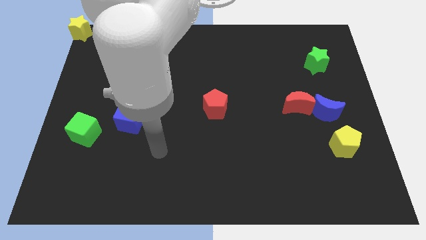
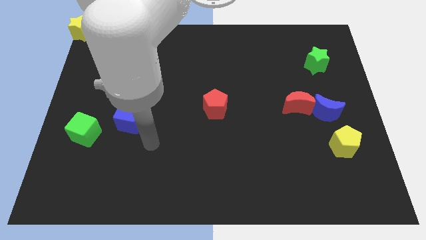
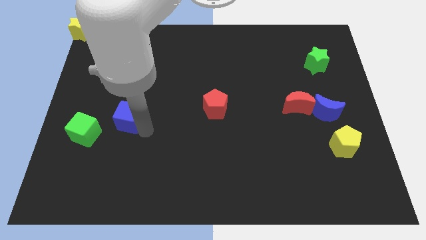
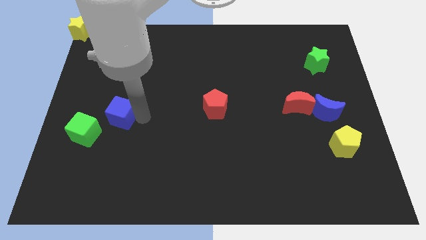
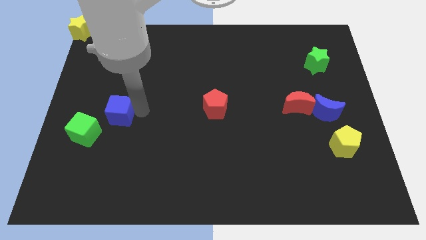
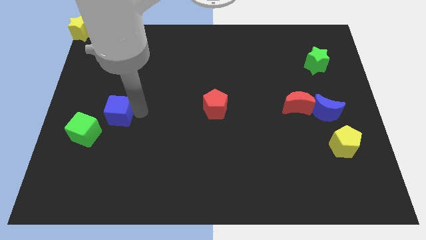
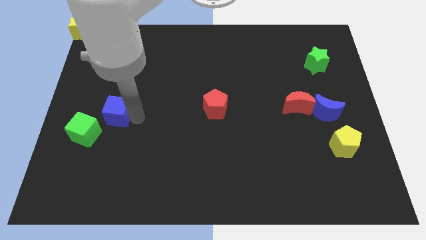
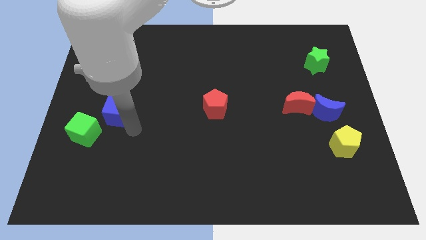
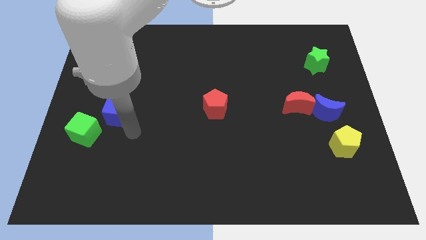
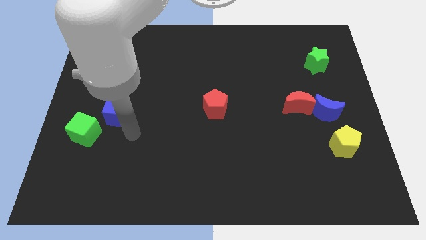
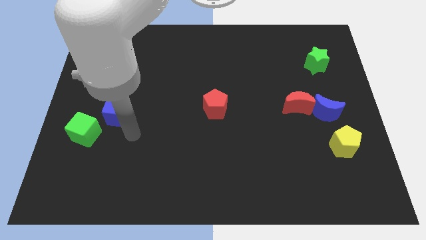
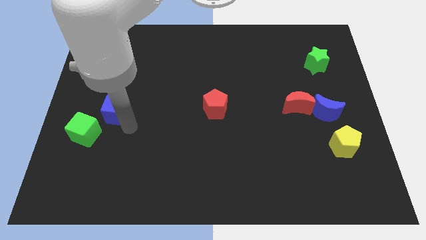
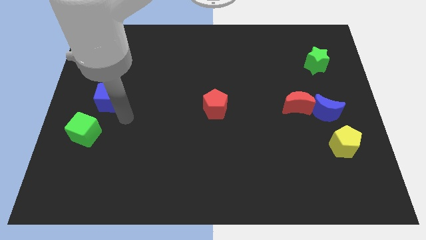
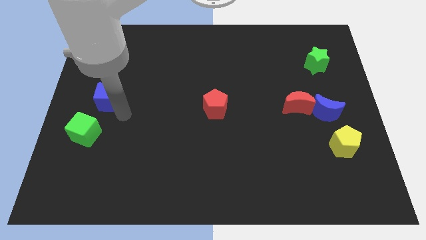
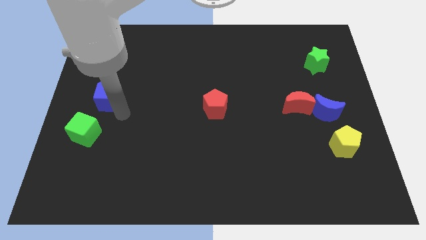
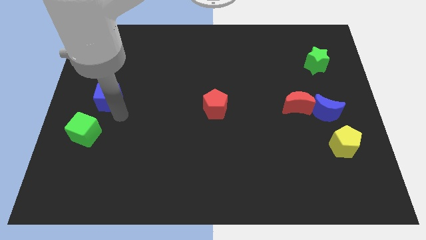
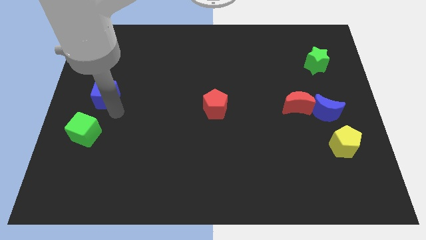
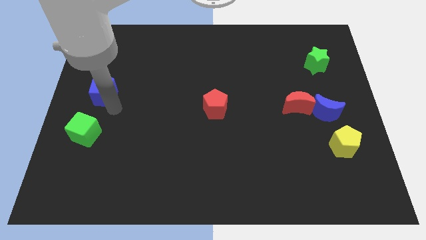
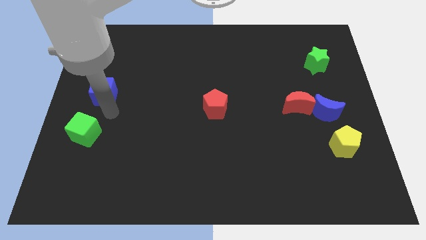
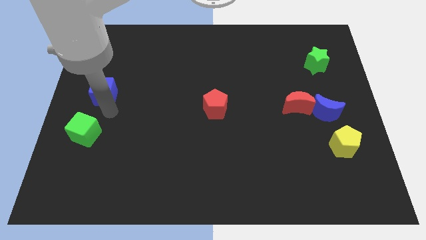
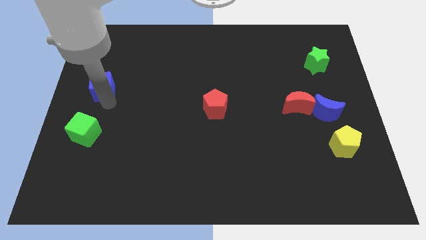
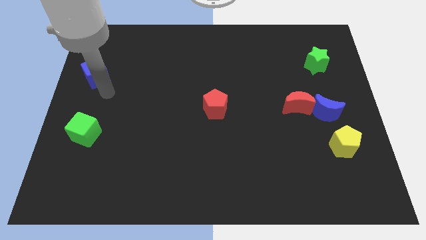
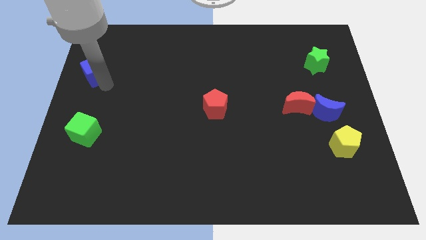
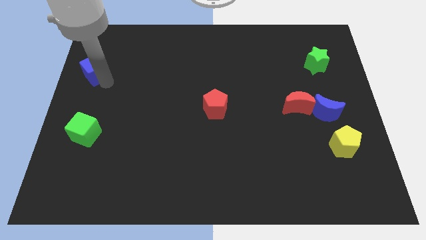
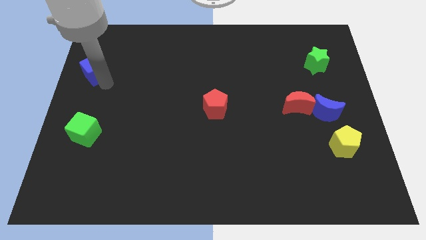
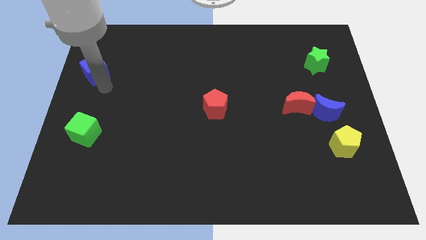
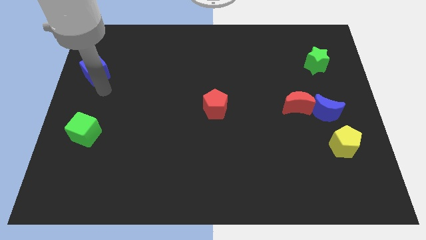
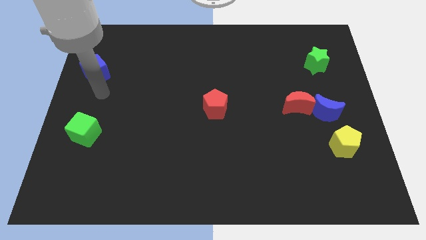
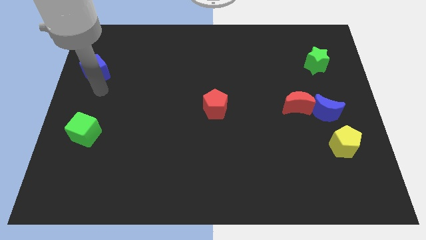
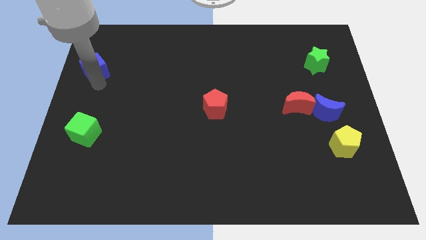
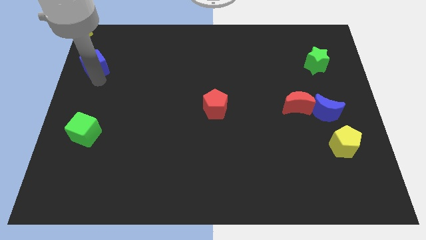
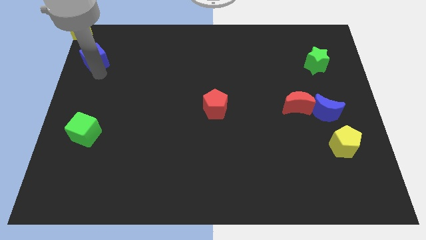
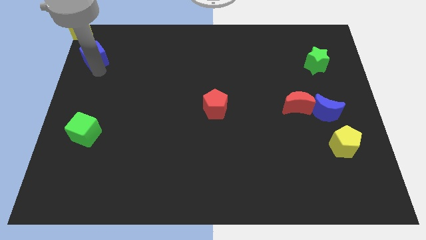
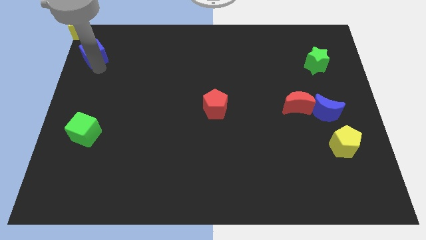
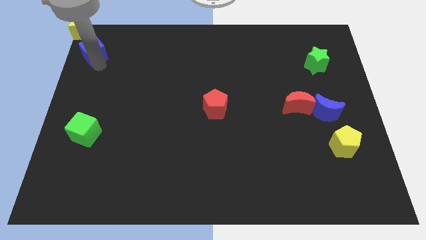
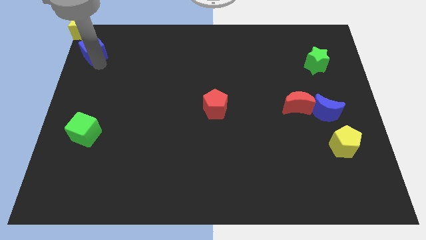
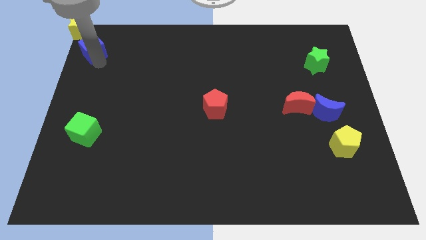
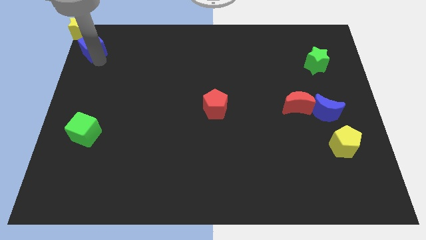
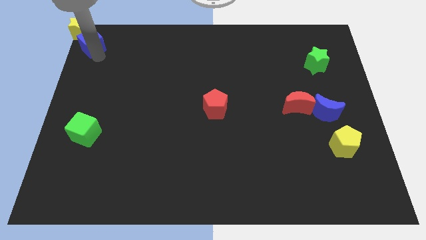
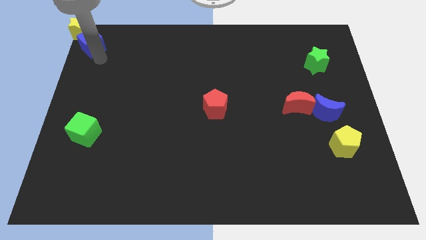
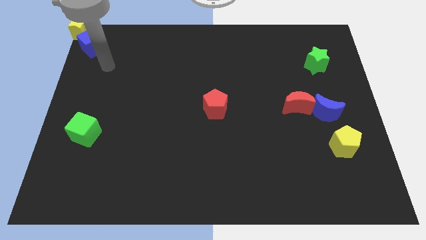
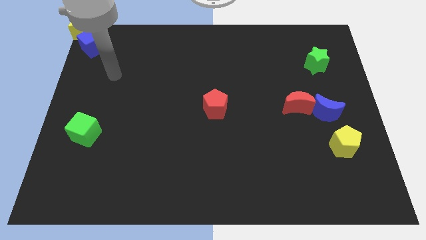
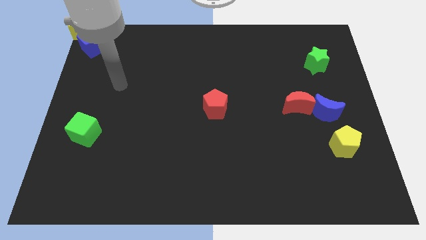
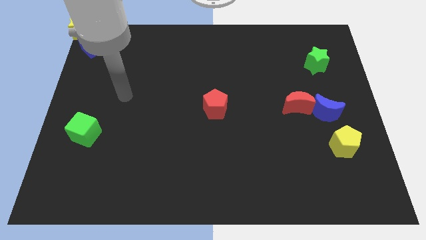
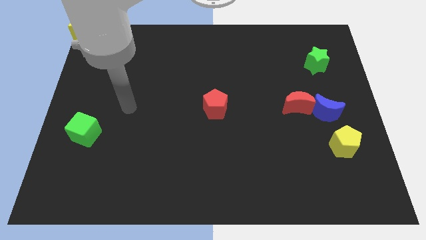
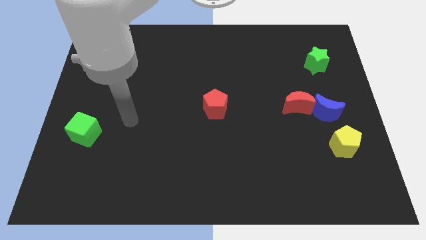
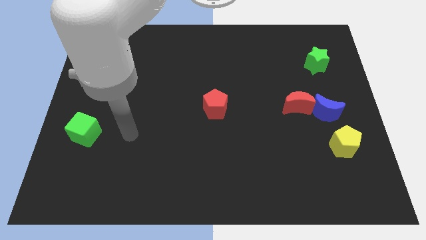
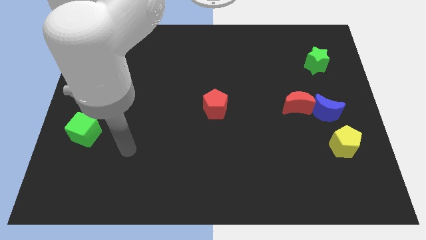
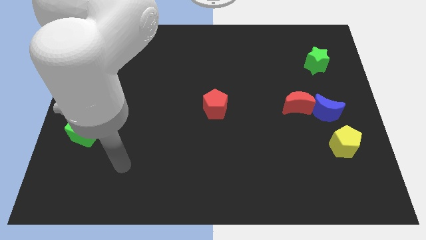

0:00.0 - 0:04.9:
slide the blue cube towards the bottom of the yellow star

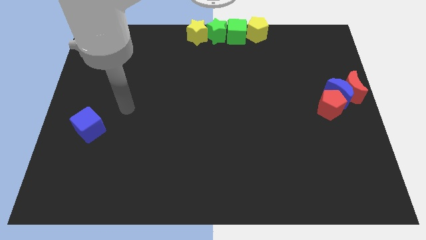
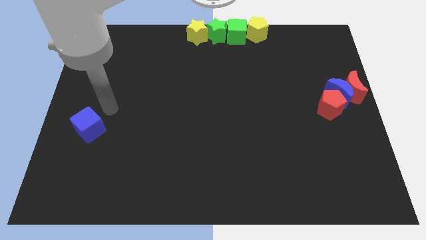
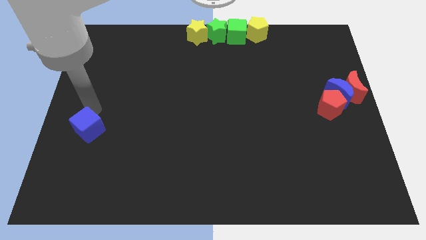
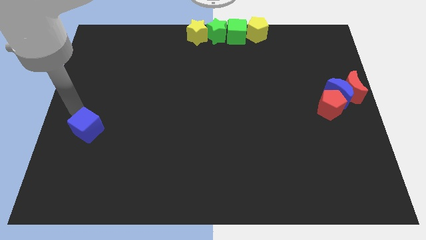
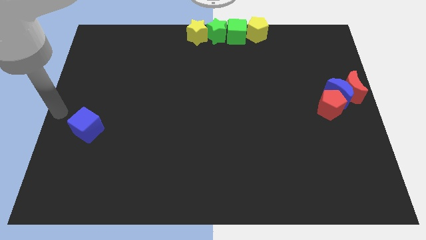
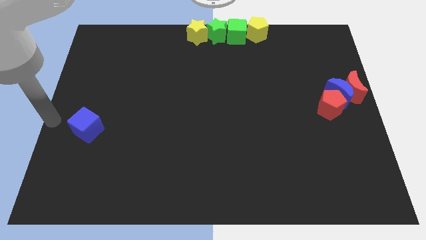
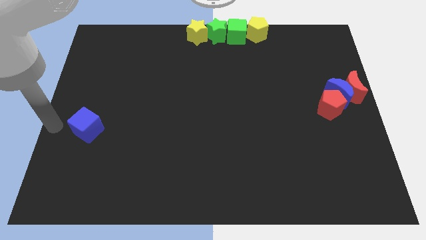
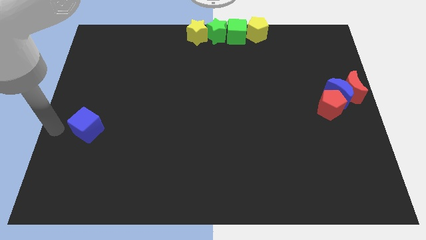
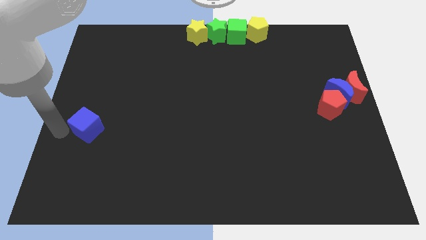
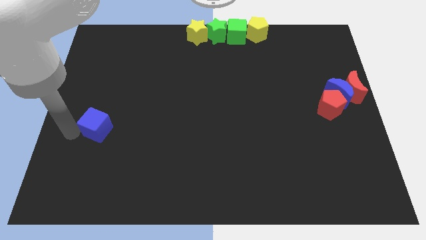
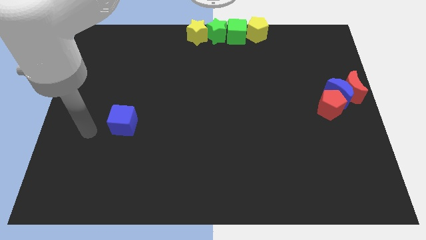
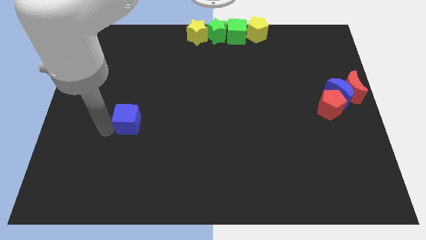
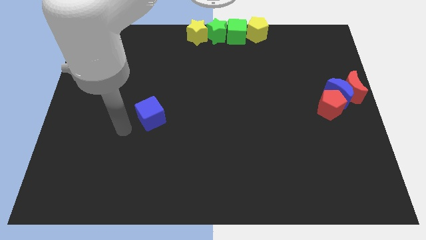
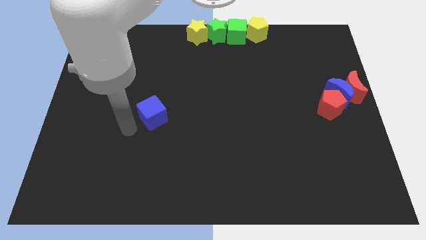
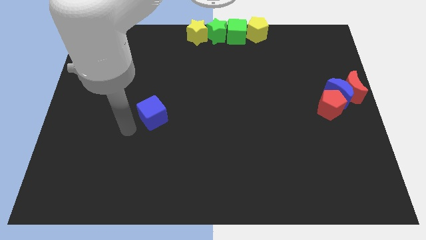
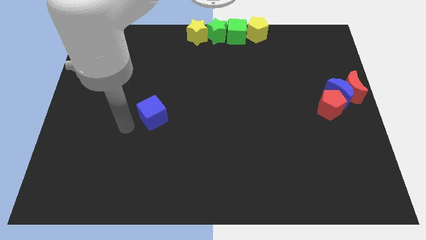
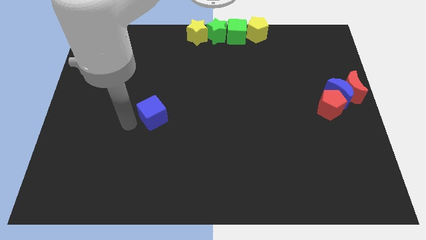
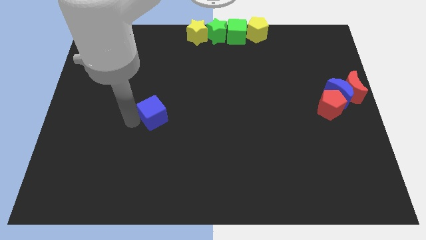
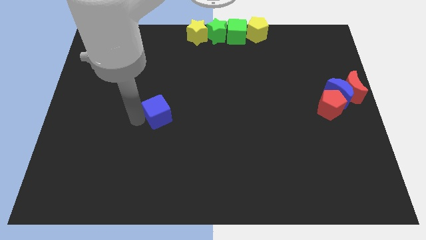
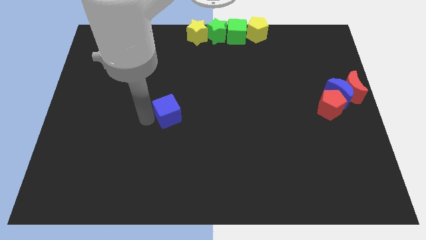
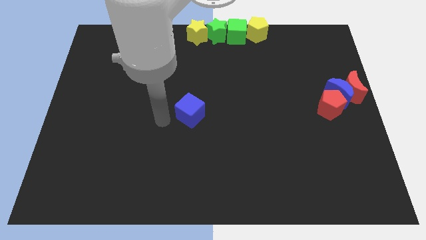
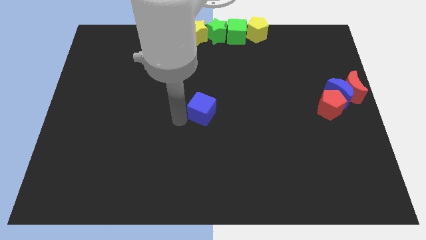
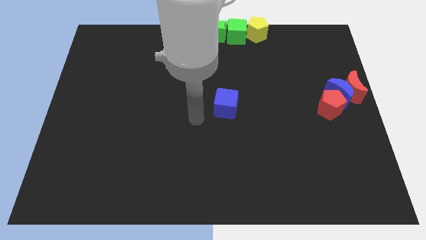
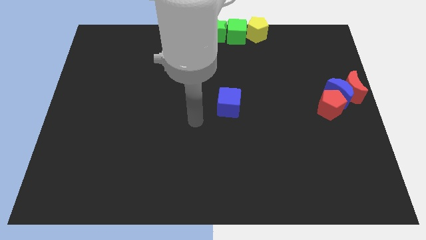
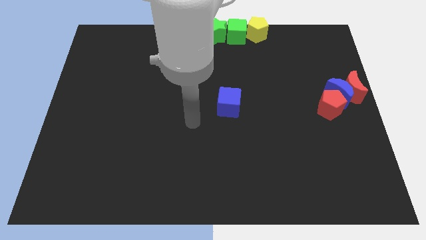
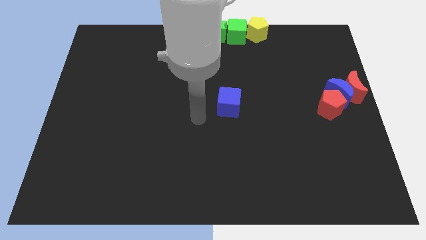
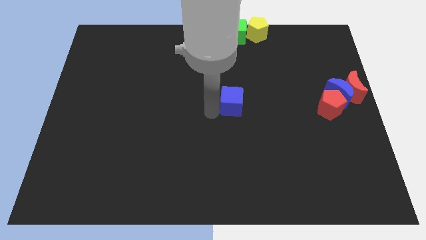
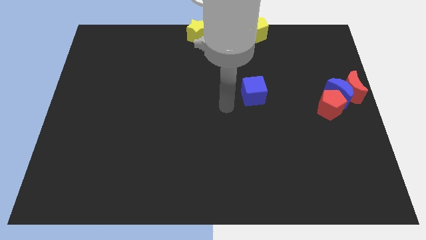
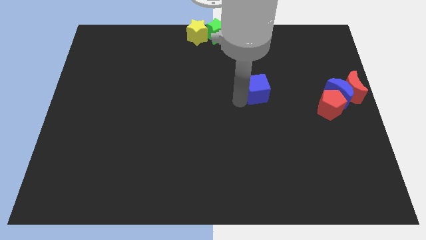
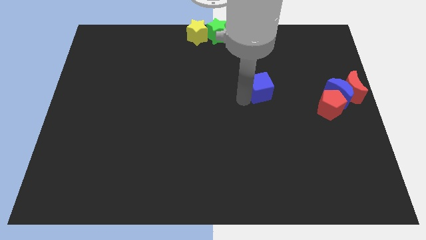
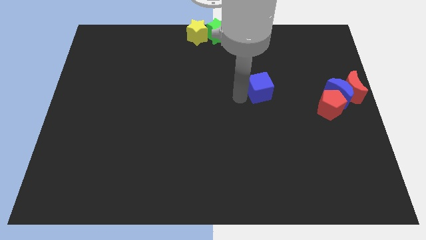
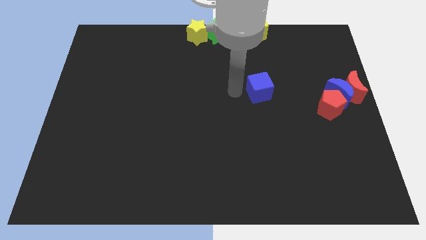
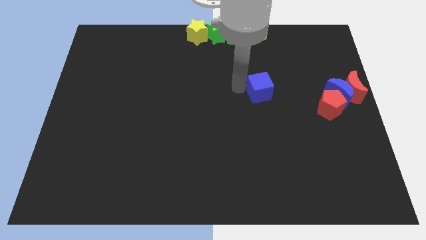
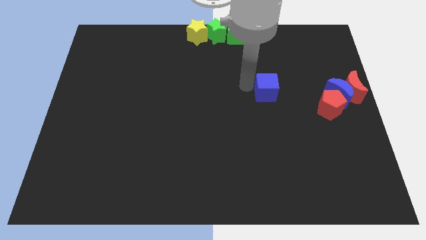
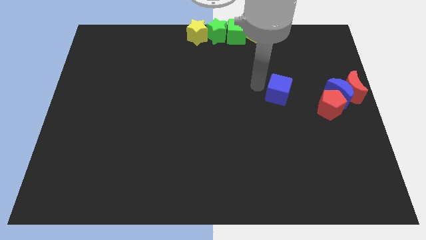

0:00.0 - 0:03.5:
push the blue cube towards the red pentagon

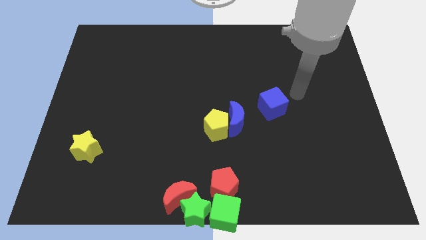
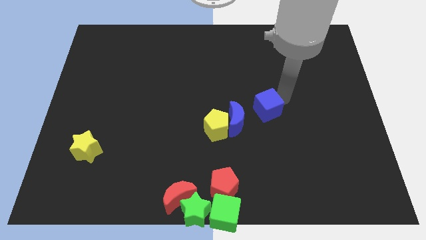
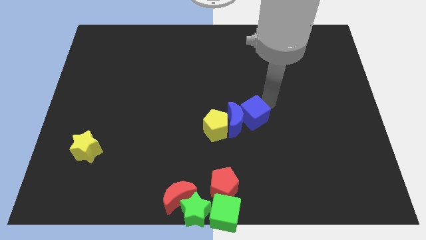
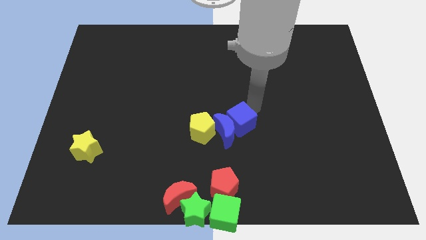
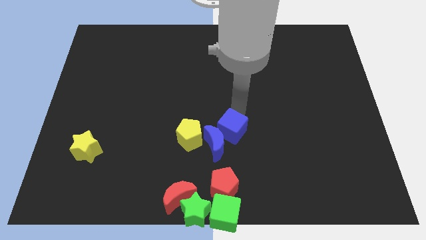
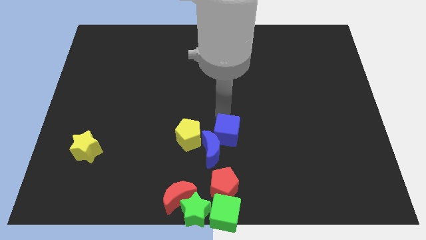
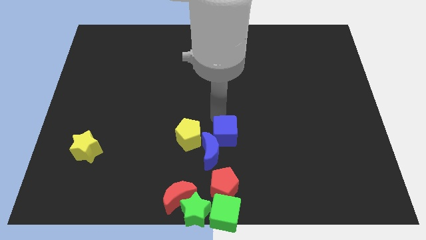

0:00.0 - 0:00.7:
push the blue cube into the blue moon

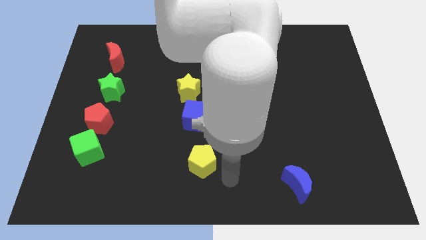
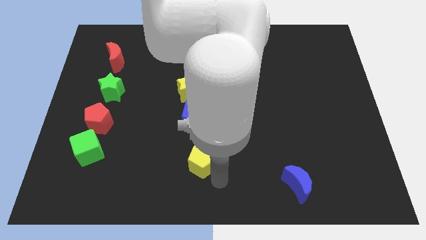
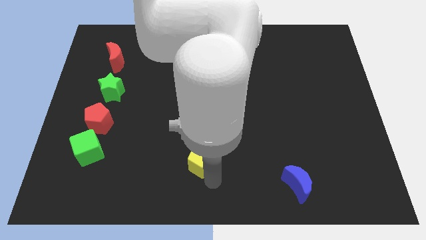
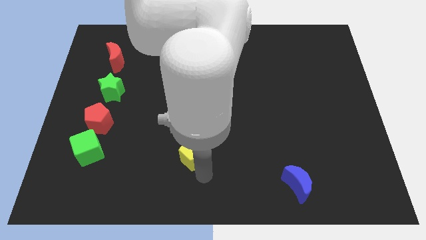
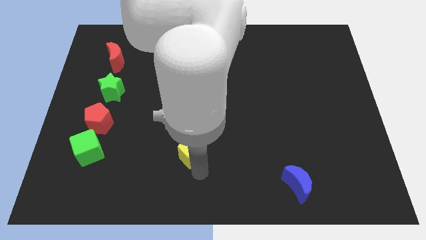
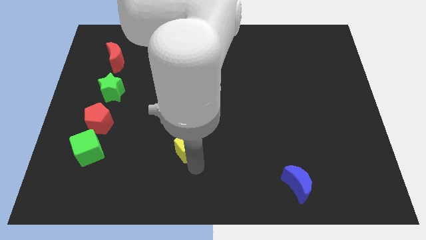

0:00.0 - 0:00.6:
push the yellow pentagon below the blue cube
